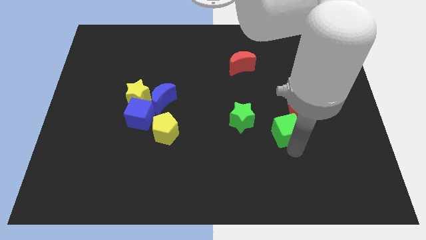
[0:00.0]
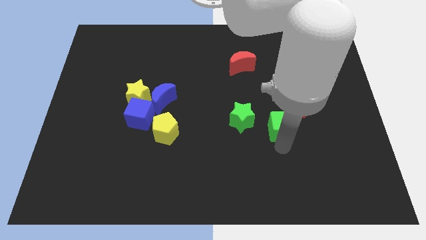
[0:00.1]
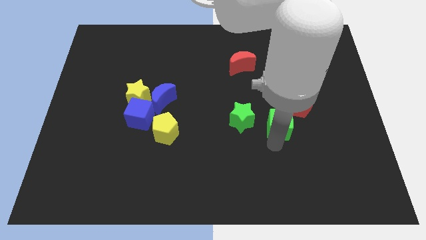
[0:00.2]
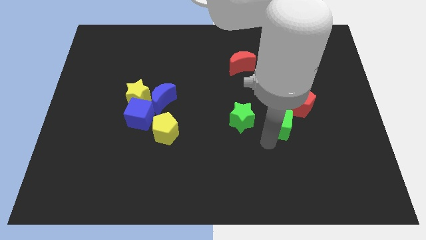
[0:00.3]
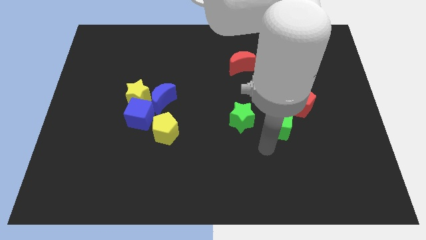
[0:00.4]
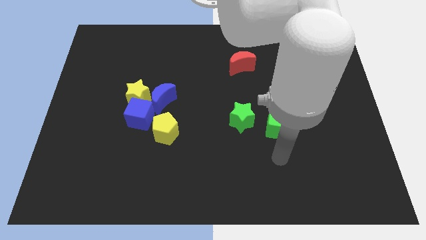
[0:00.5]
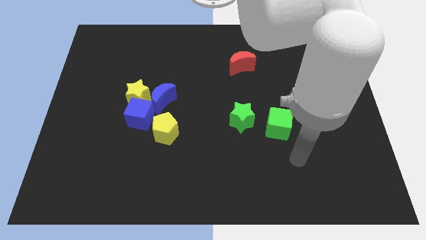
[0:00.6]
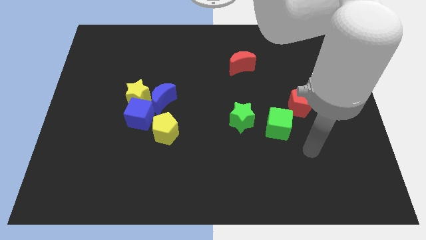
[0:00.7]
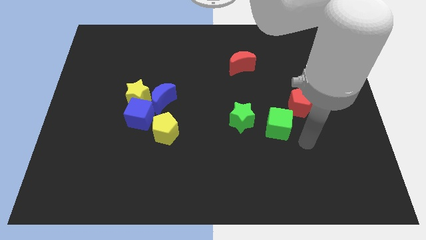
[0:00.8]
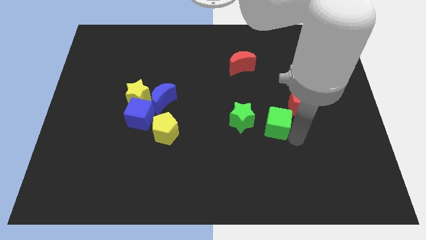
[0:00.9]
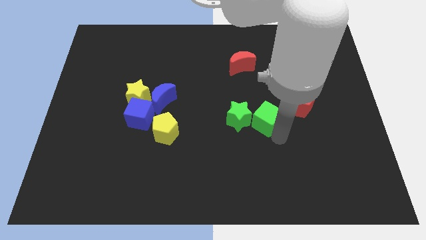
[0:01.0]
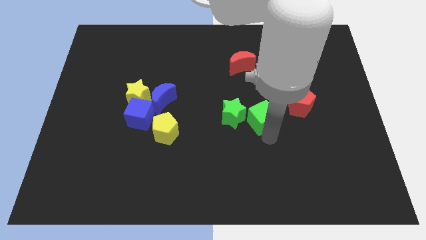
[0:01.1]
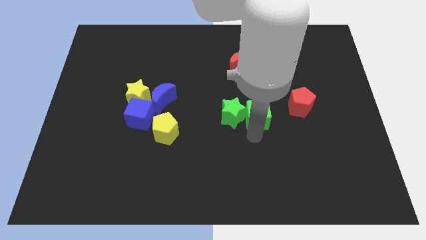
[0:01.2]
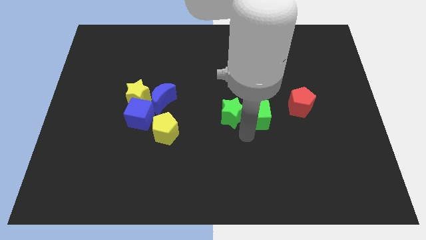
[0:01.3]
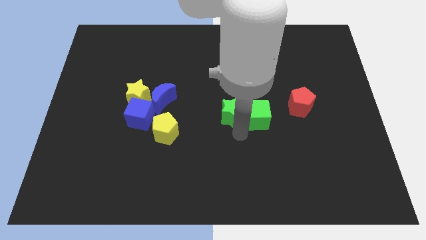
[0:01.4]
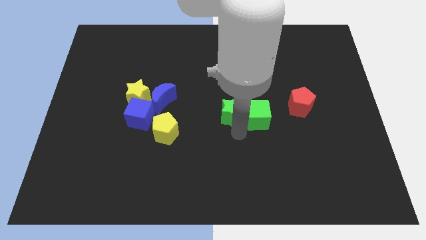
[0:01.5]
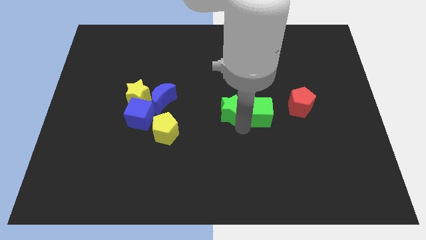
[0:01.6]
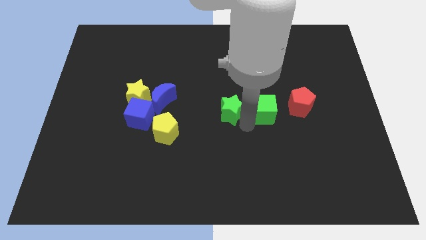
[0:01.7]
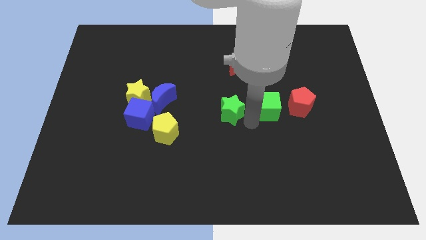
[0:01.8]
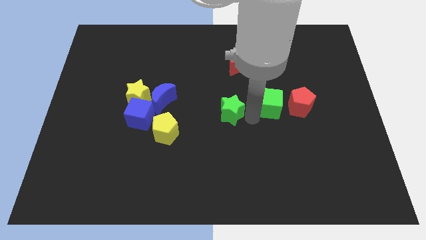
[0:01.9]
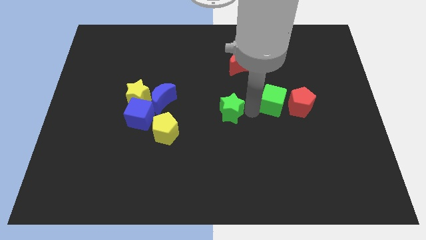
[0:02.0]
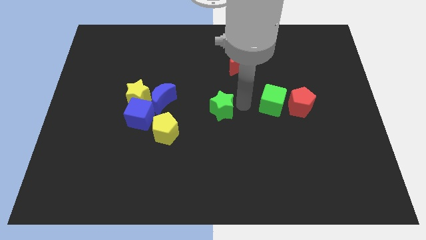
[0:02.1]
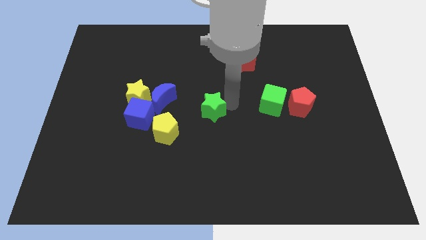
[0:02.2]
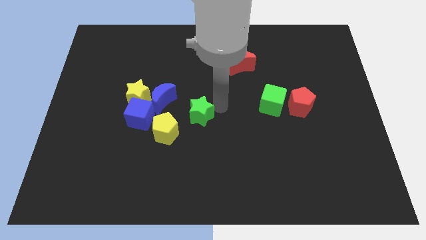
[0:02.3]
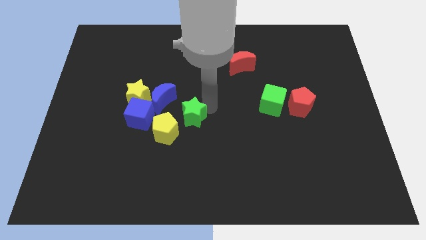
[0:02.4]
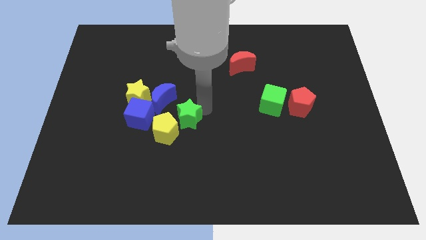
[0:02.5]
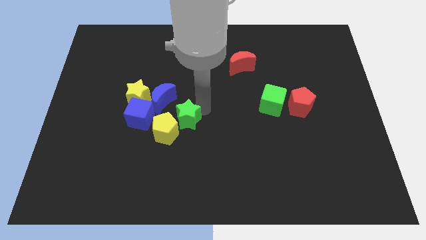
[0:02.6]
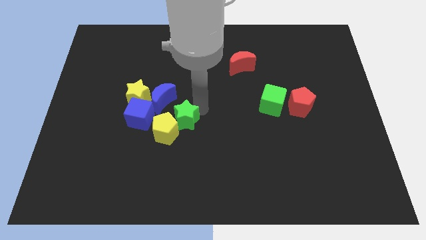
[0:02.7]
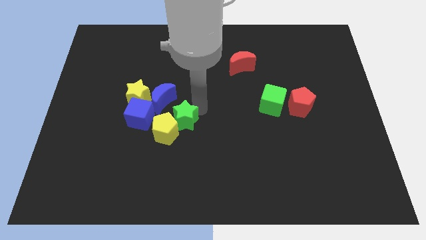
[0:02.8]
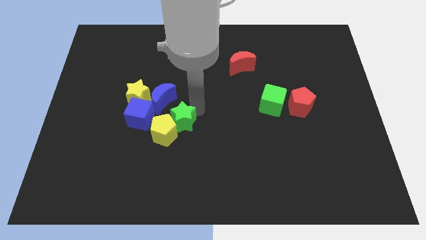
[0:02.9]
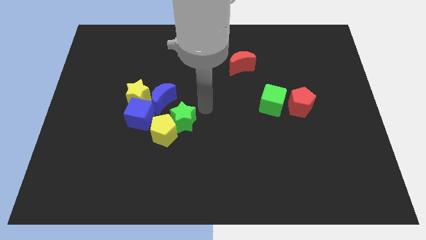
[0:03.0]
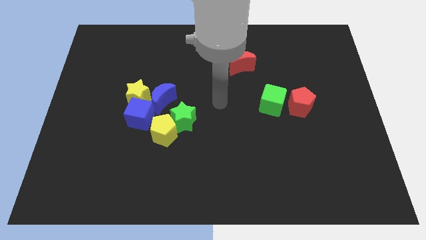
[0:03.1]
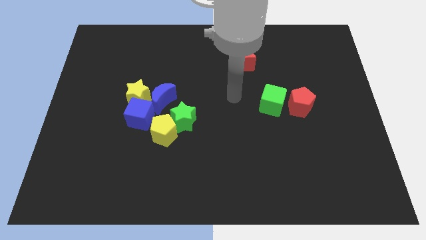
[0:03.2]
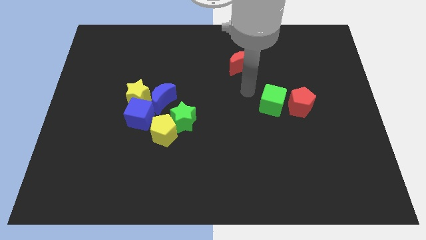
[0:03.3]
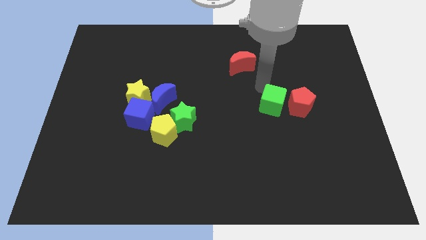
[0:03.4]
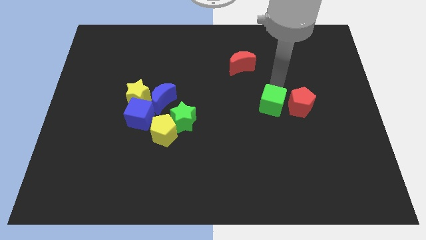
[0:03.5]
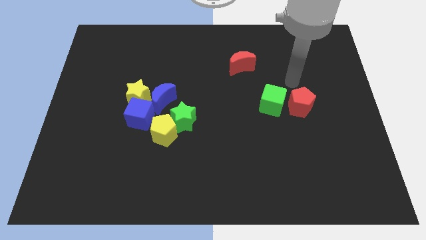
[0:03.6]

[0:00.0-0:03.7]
place the green star to the right side of yellow pentagon by moving it half a way with green cube

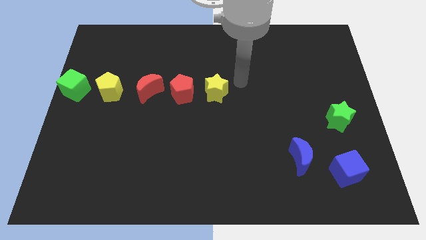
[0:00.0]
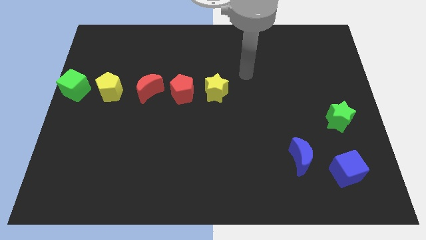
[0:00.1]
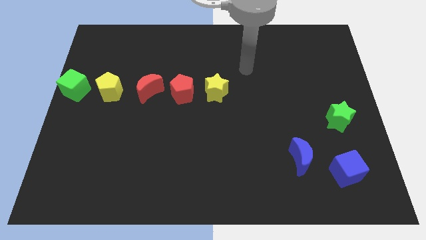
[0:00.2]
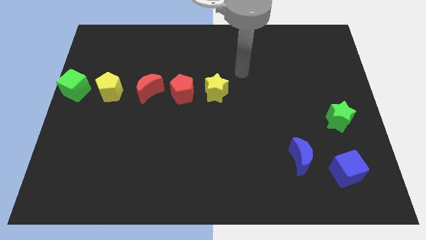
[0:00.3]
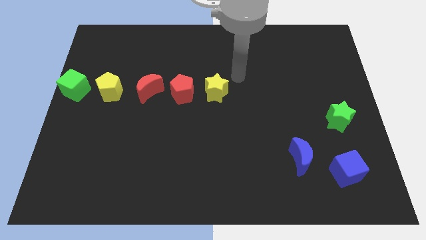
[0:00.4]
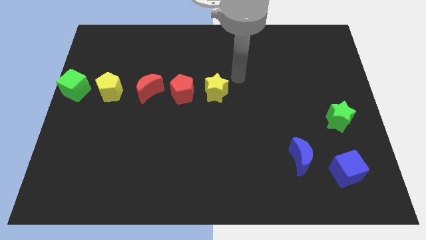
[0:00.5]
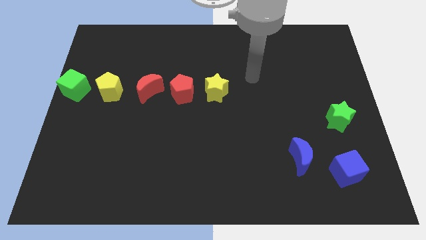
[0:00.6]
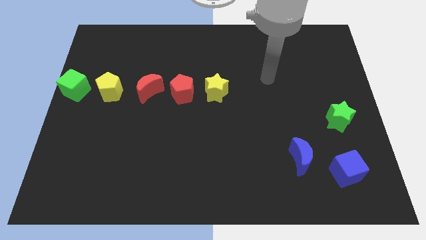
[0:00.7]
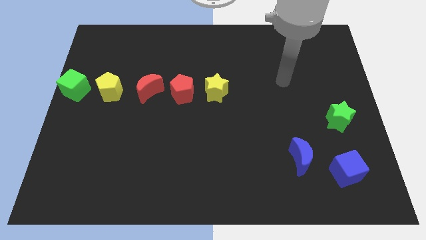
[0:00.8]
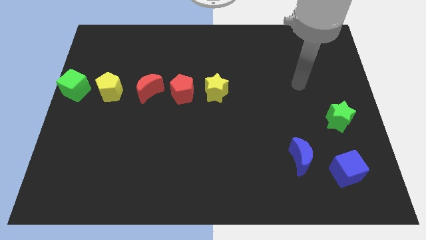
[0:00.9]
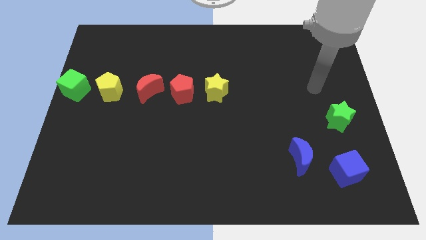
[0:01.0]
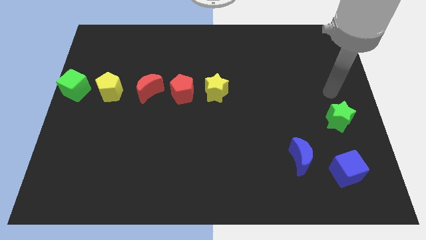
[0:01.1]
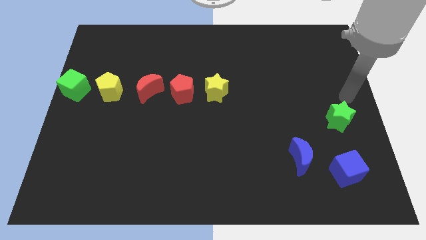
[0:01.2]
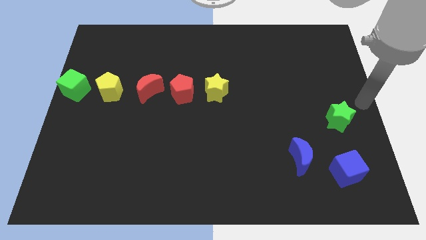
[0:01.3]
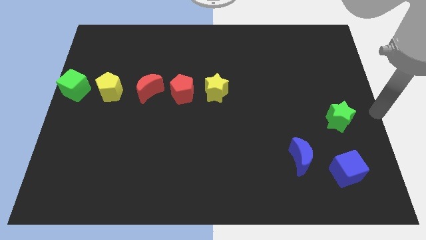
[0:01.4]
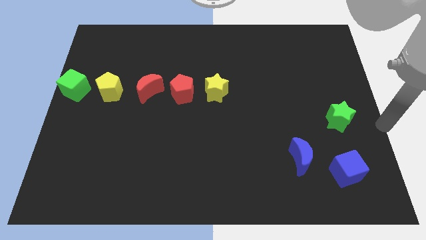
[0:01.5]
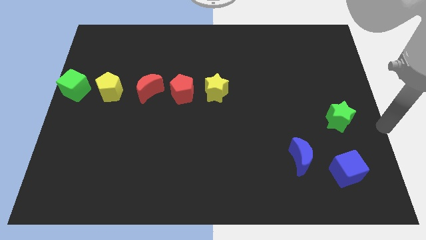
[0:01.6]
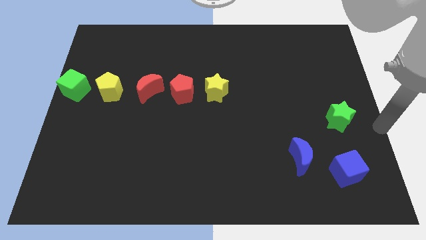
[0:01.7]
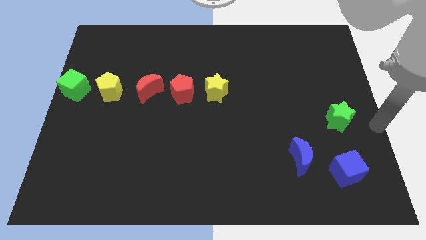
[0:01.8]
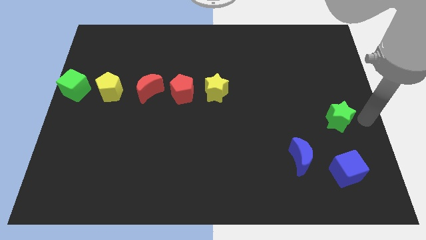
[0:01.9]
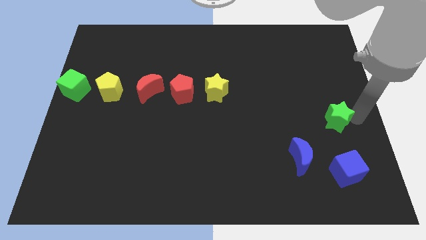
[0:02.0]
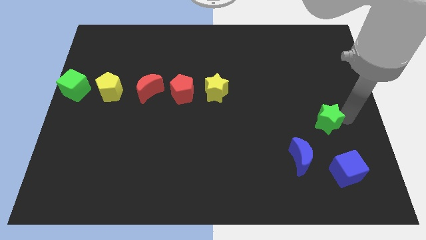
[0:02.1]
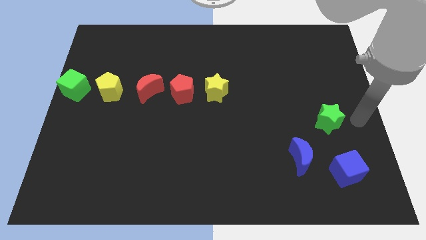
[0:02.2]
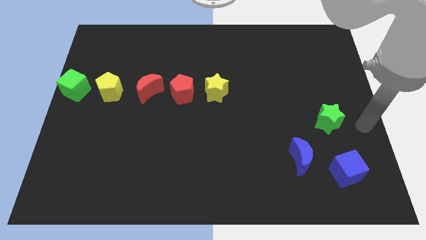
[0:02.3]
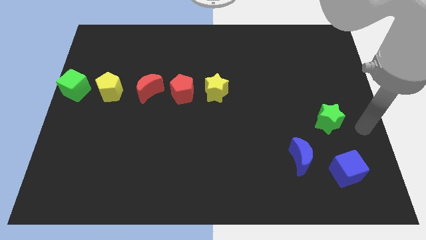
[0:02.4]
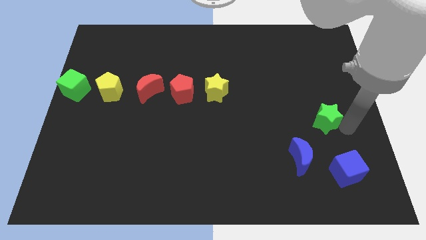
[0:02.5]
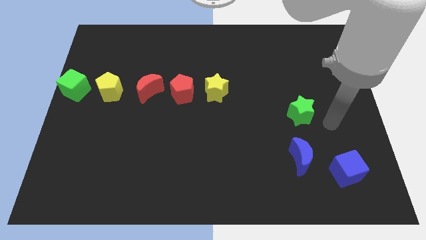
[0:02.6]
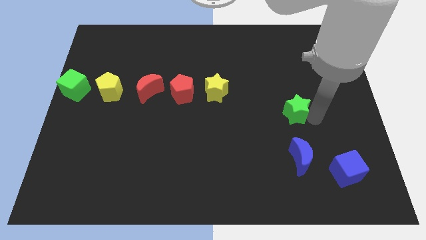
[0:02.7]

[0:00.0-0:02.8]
place the green star above the blue moon

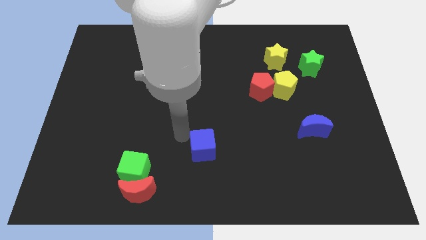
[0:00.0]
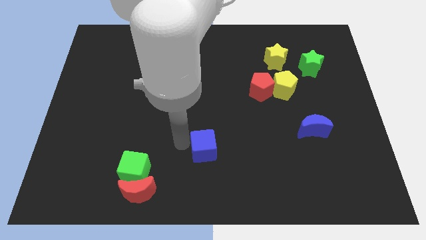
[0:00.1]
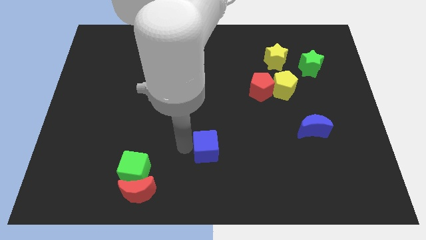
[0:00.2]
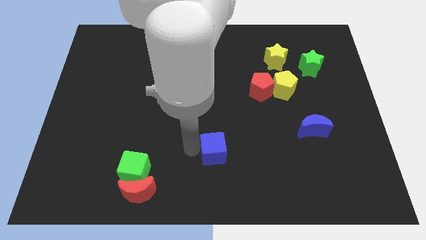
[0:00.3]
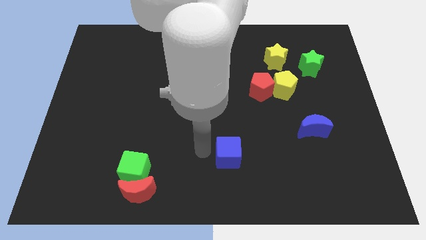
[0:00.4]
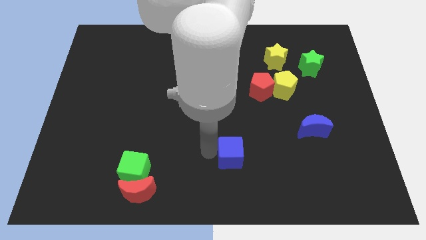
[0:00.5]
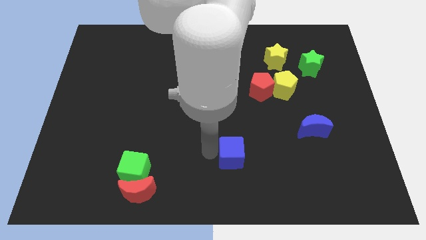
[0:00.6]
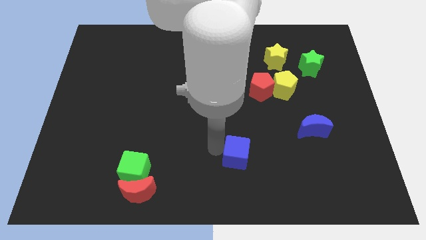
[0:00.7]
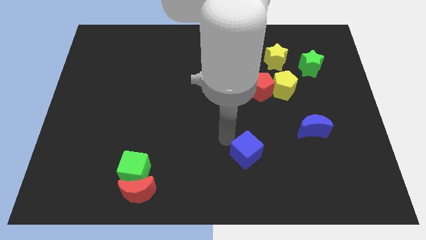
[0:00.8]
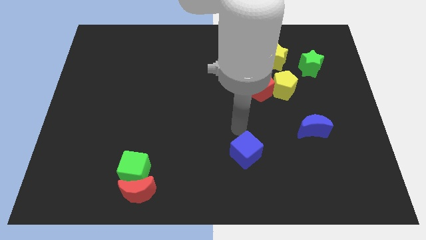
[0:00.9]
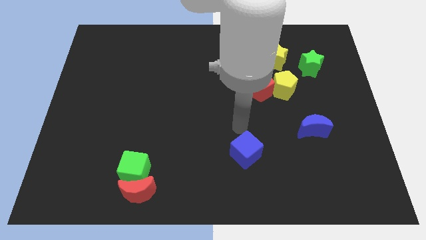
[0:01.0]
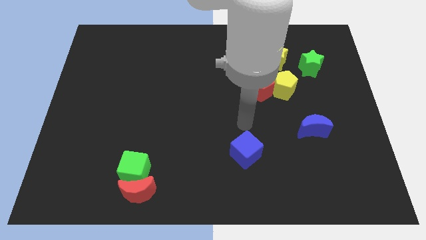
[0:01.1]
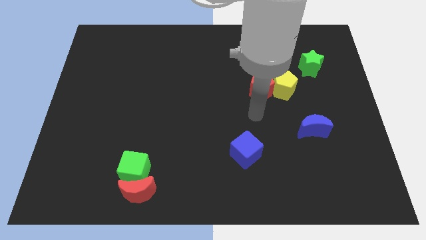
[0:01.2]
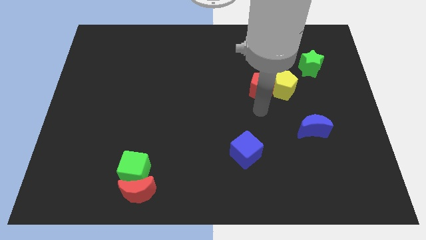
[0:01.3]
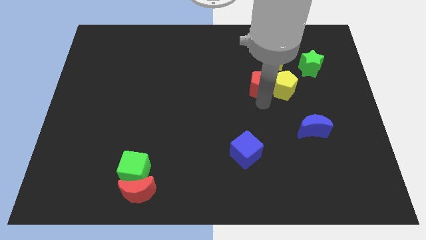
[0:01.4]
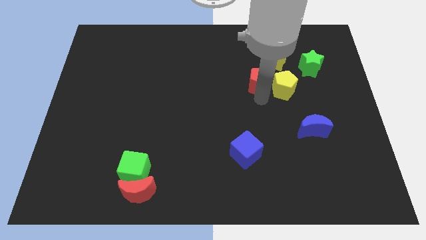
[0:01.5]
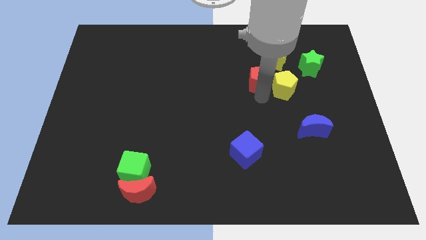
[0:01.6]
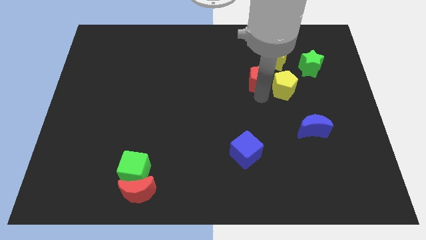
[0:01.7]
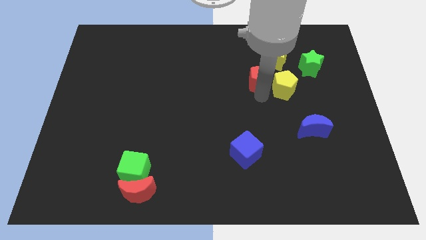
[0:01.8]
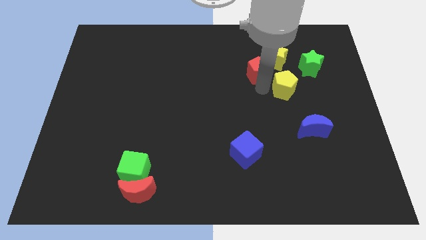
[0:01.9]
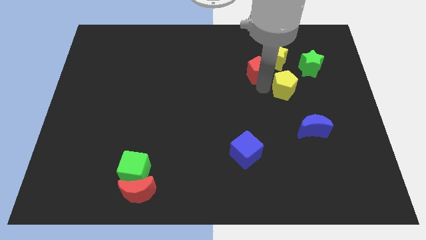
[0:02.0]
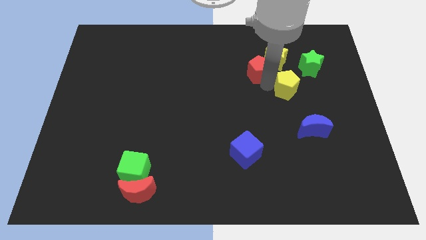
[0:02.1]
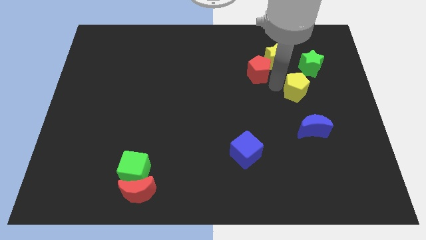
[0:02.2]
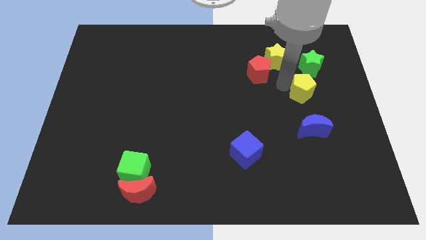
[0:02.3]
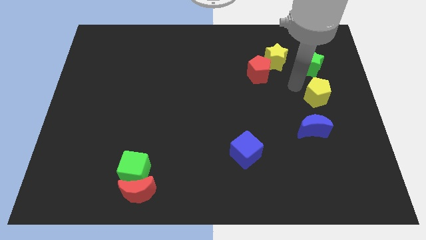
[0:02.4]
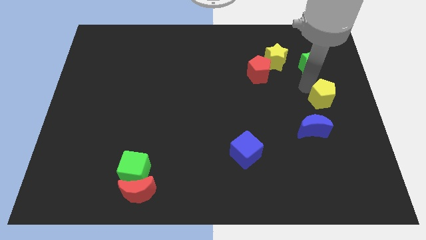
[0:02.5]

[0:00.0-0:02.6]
push yellow pentagon above blue crescent
